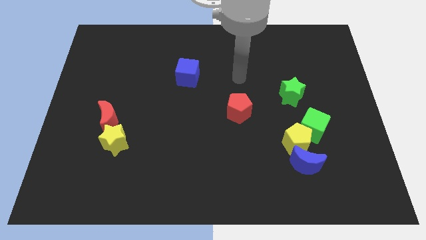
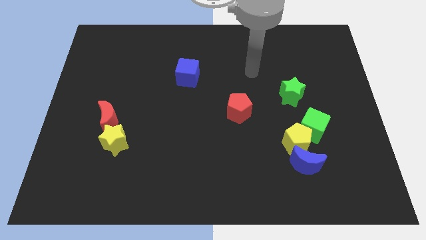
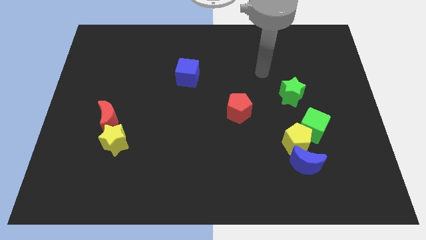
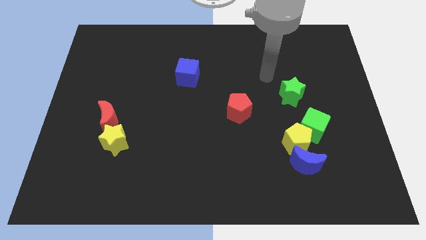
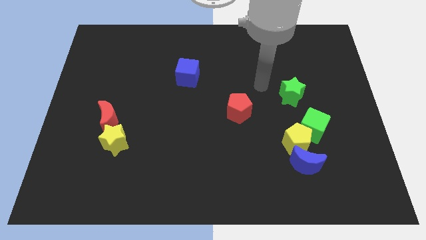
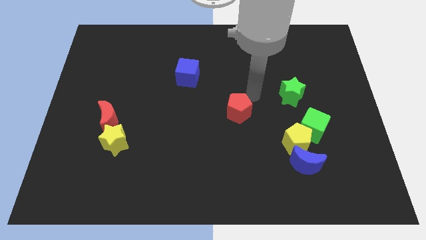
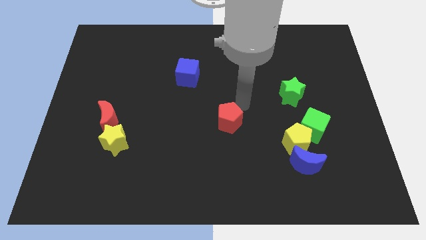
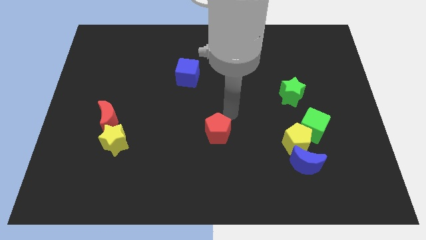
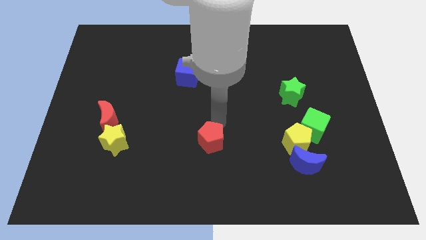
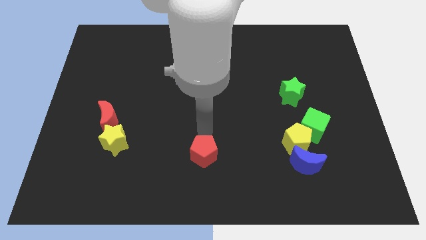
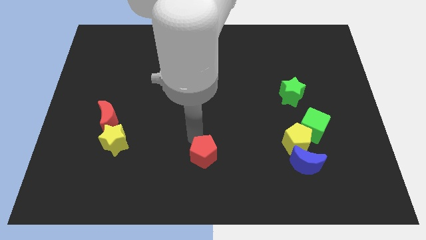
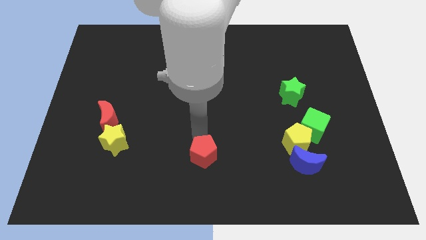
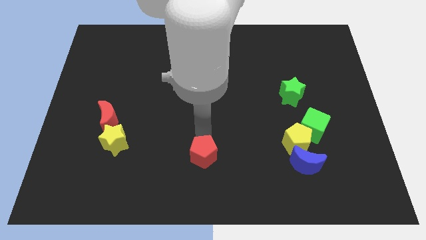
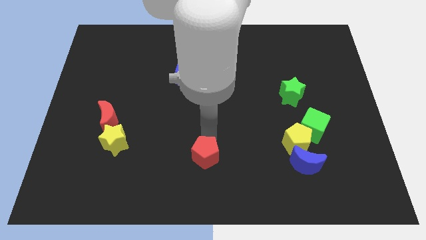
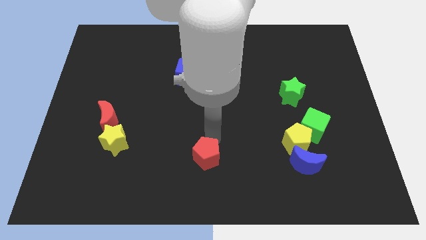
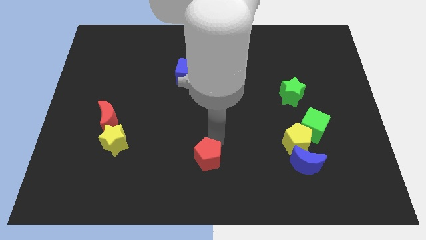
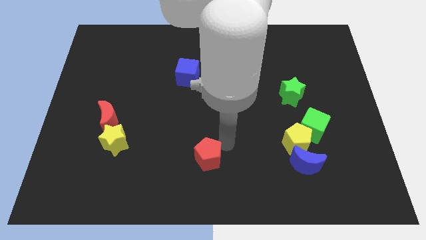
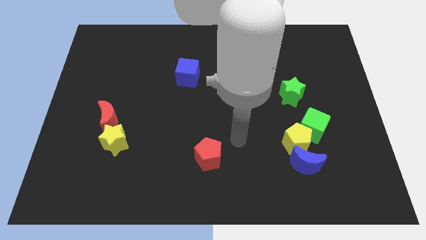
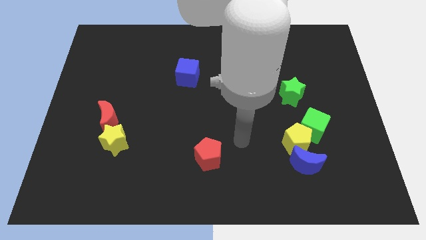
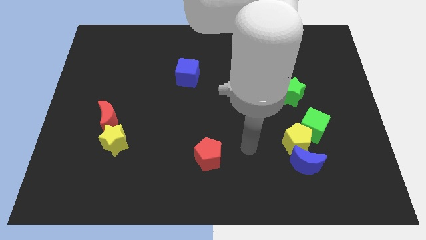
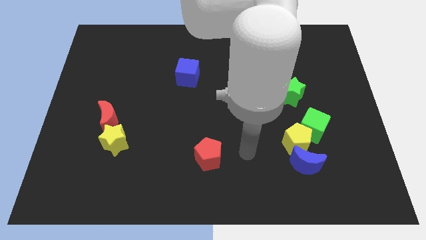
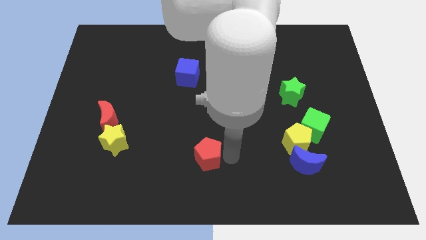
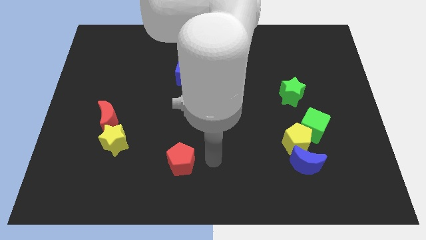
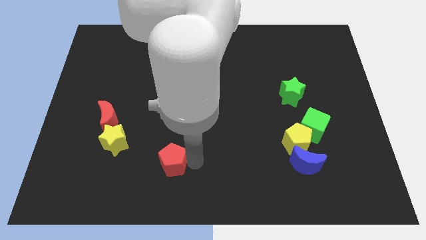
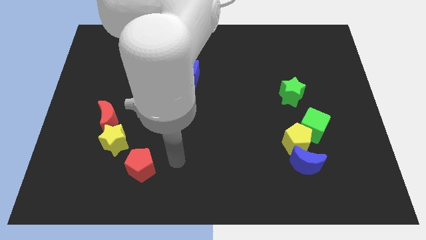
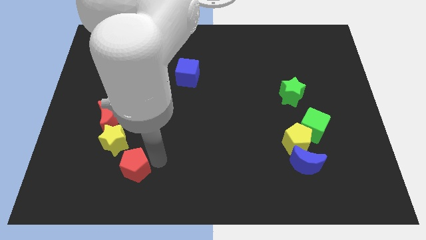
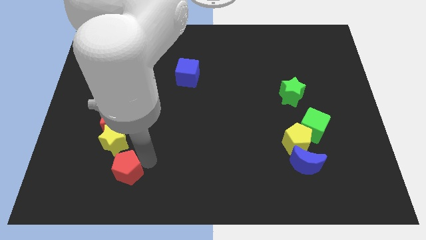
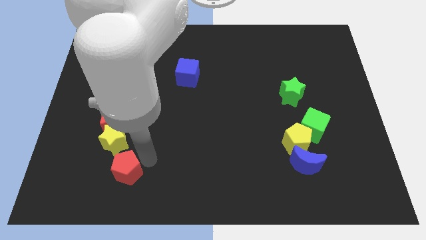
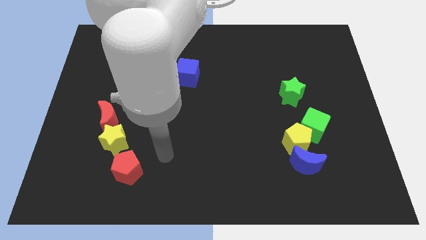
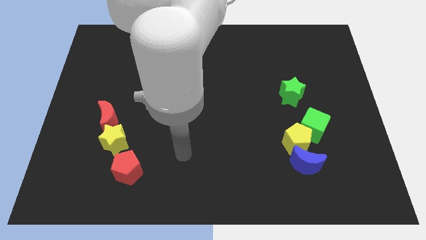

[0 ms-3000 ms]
put the red pentagon below the yellow star

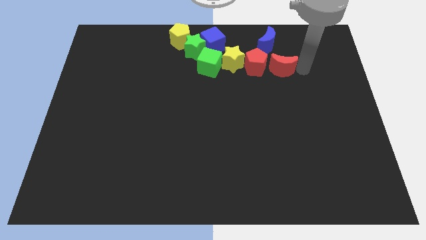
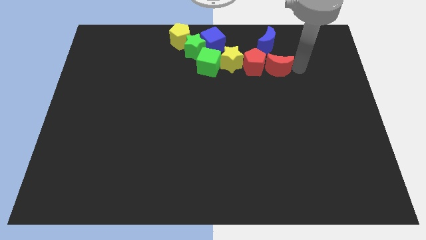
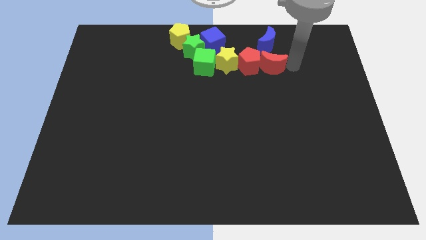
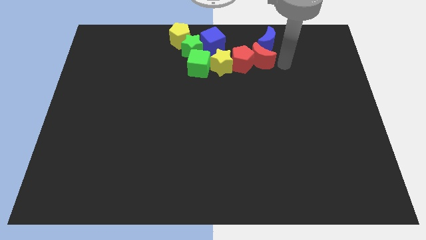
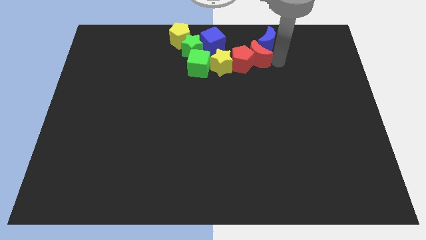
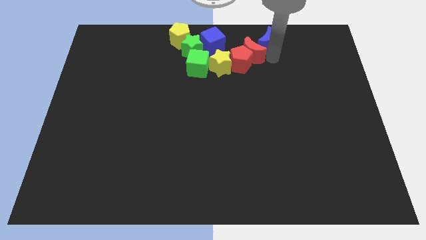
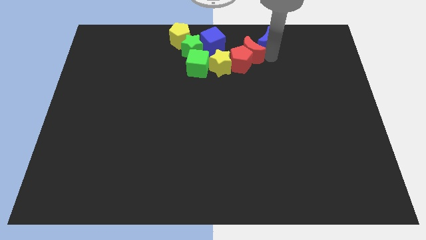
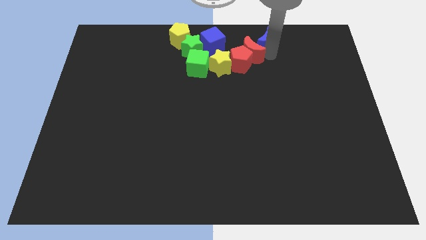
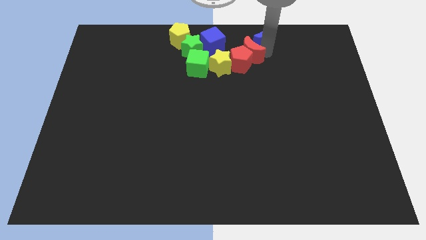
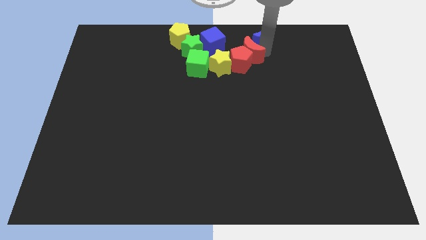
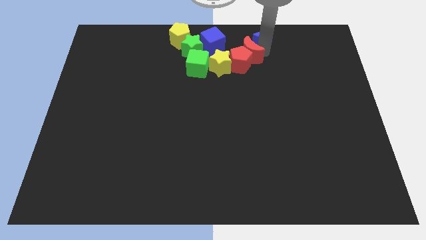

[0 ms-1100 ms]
move the red crescent in between the red pentagon and the blue crescent

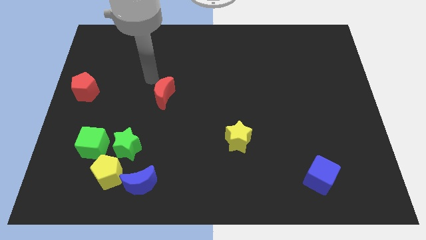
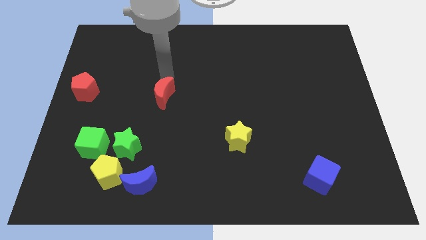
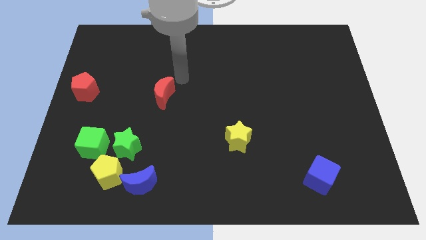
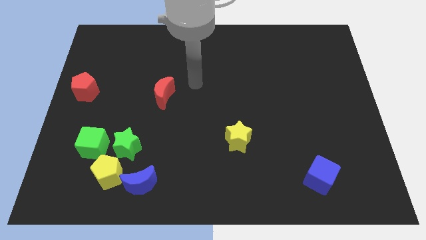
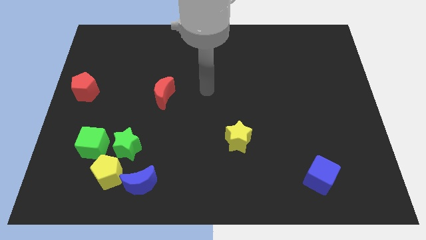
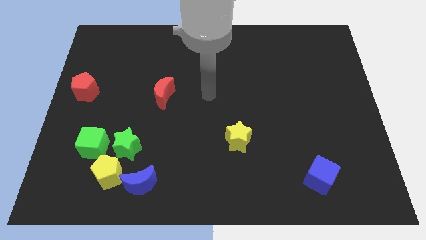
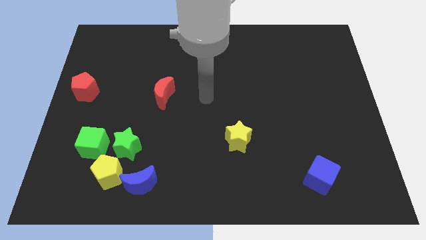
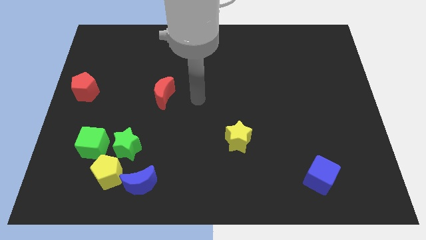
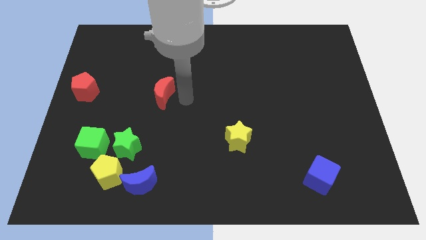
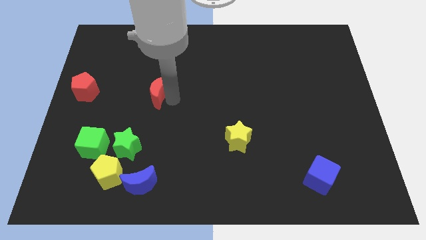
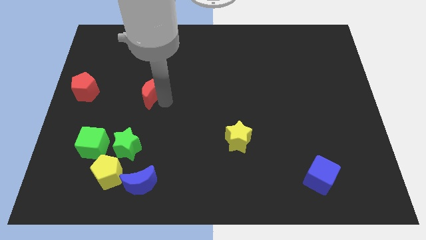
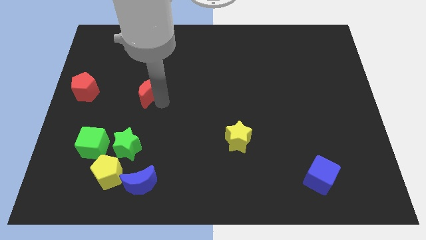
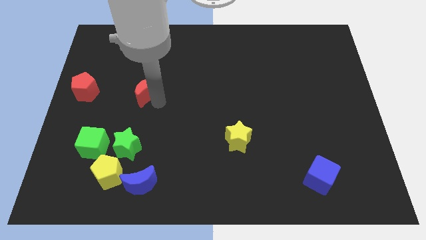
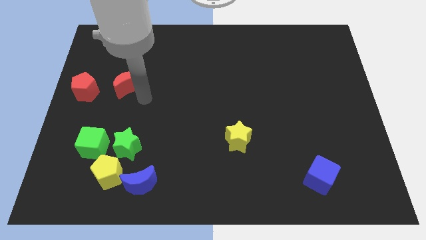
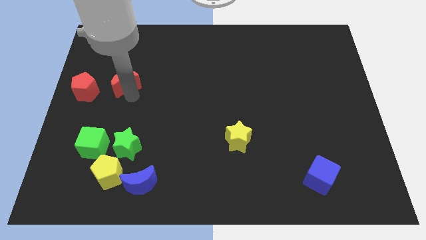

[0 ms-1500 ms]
push the red crescent to the top of the green star

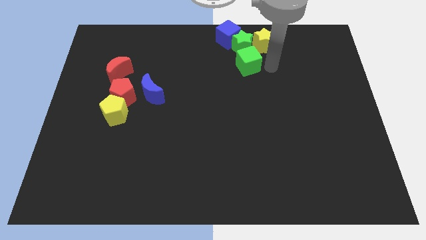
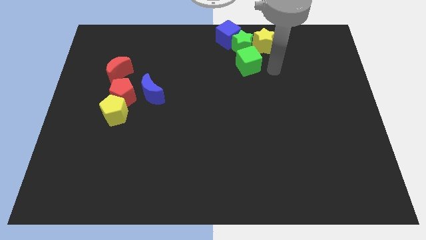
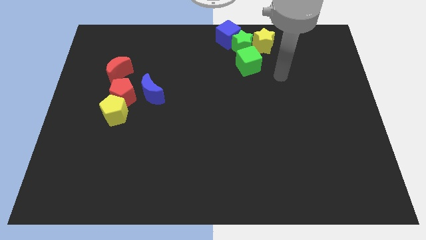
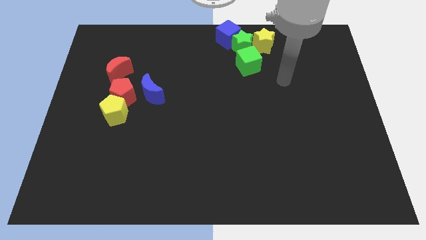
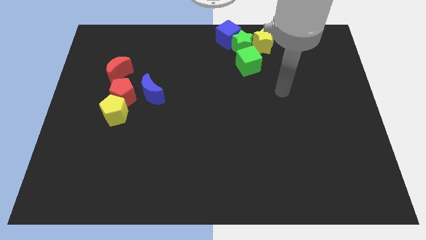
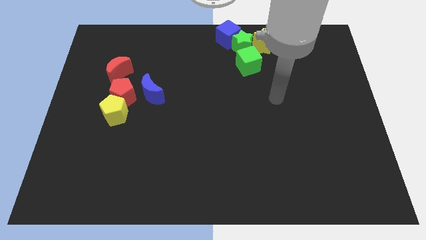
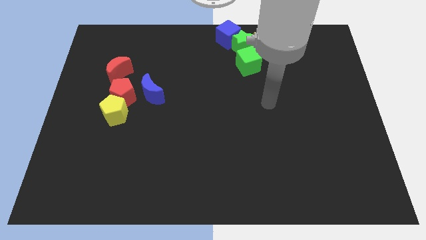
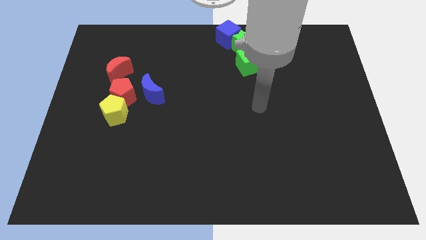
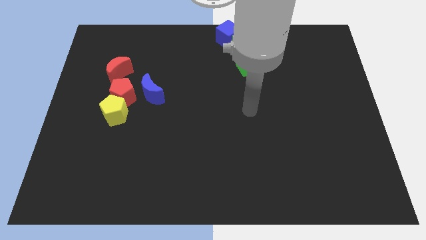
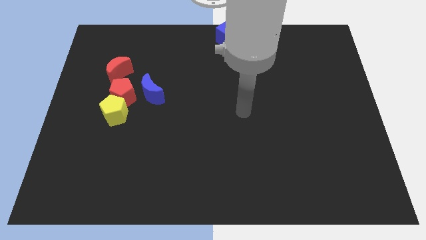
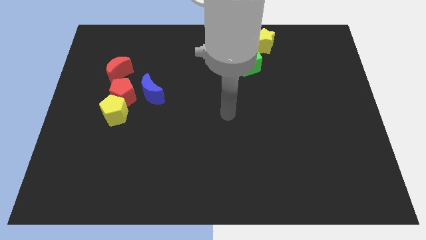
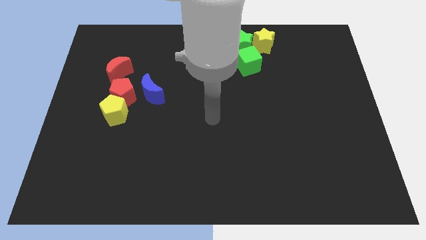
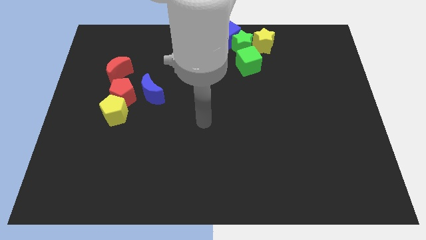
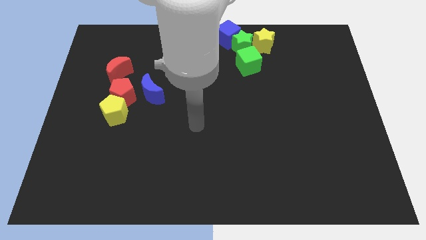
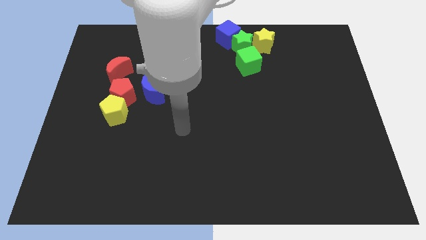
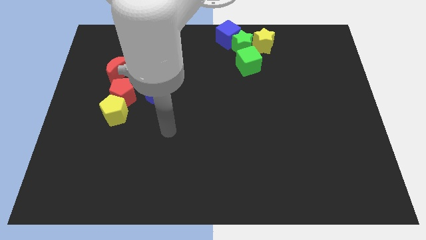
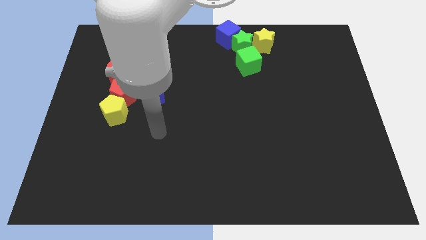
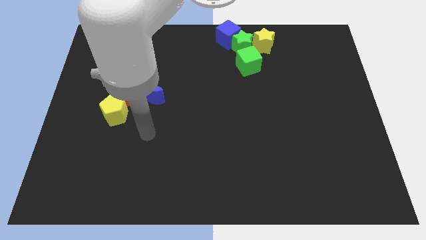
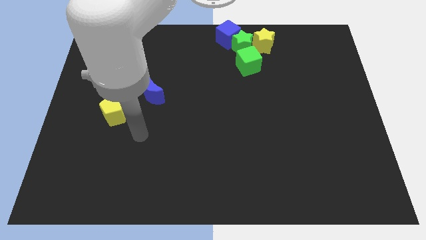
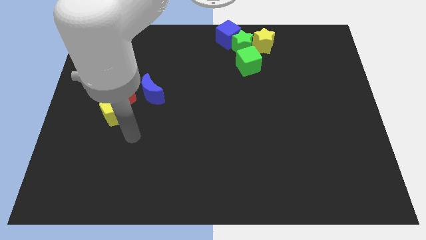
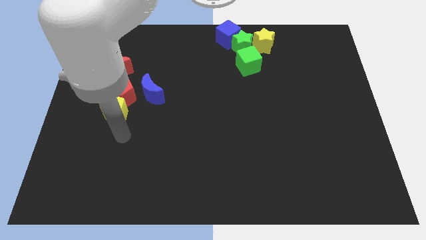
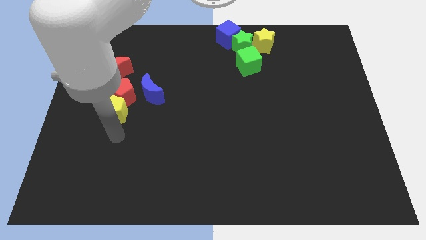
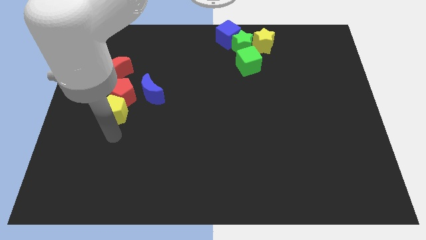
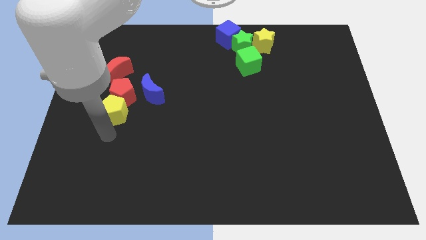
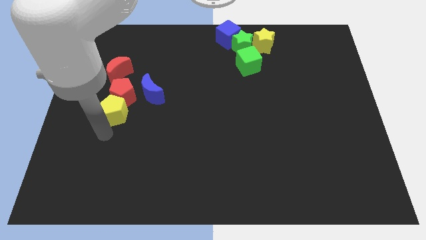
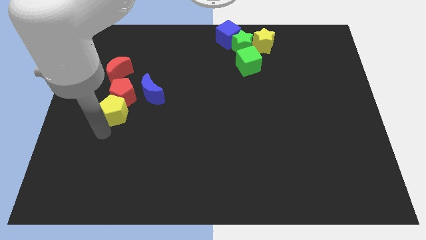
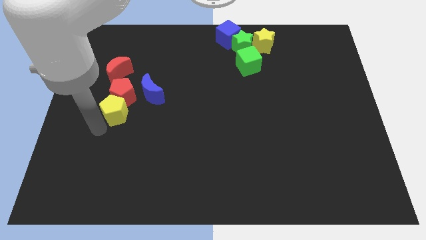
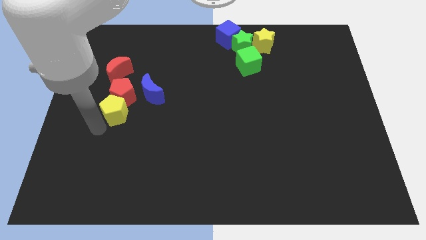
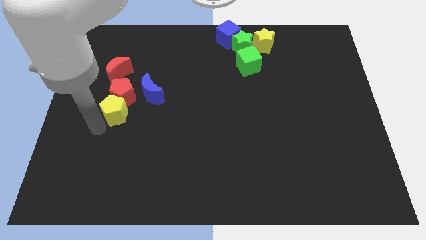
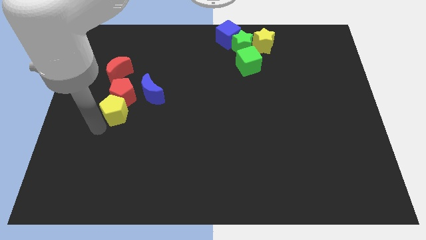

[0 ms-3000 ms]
go near yellow pentagon

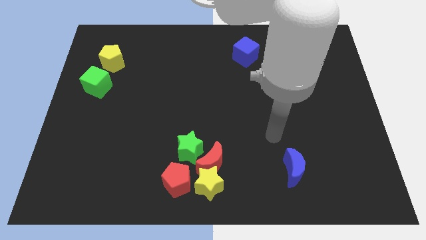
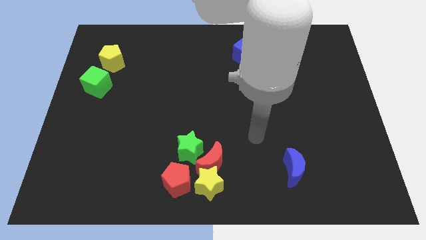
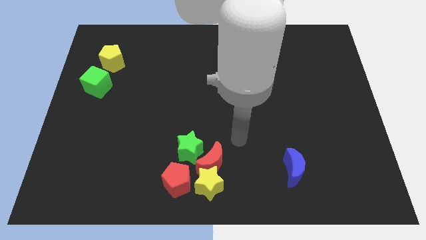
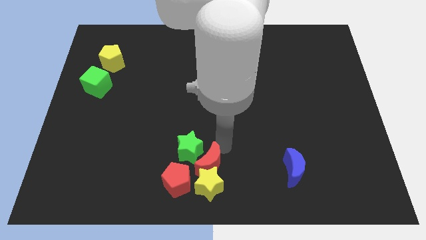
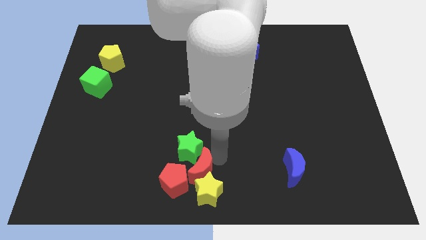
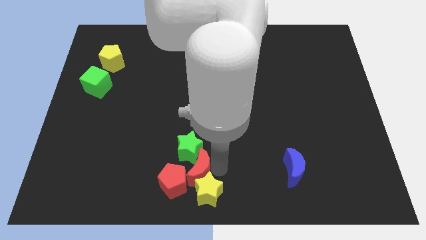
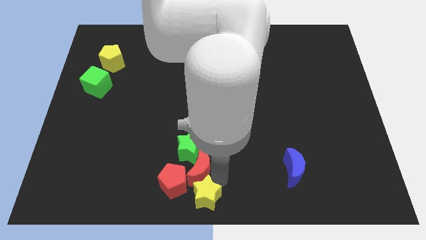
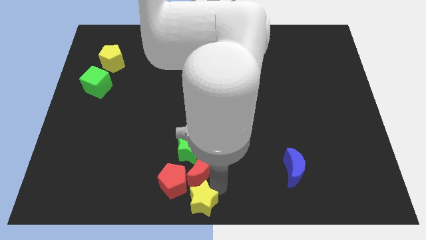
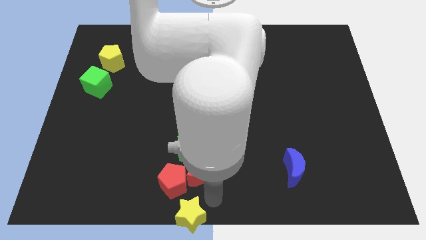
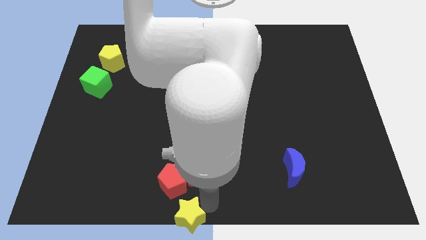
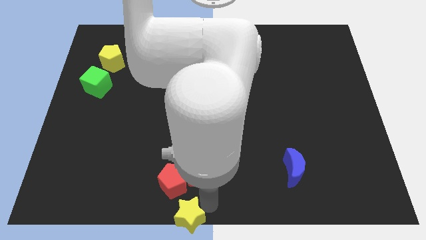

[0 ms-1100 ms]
separate the yellow star from the red crescent
